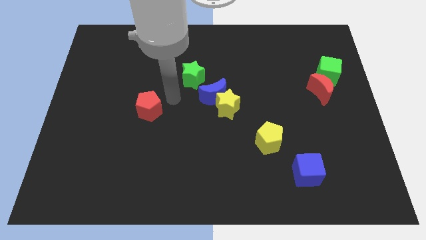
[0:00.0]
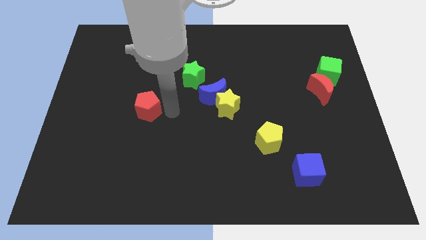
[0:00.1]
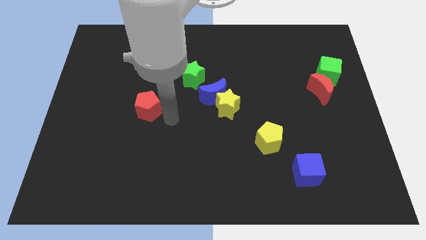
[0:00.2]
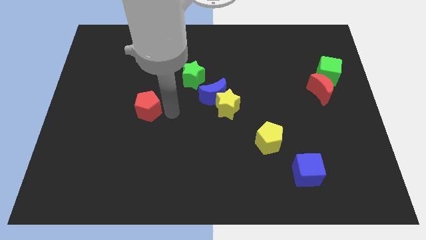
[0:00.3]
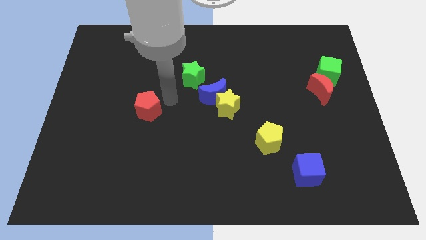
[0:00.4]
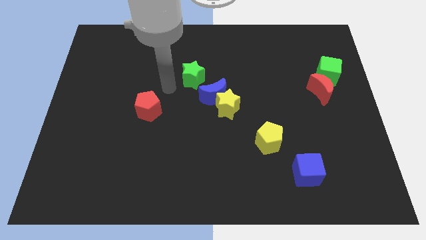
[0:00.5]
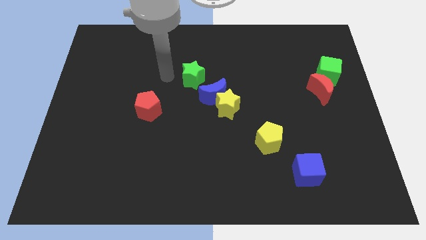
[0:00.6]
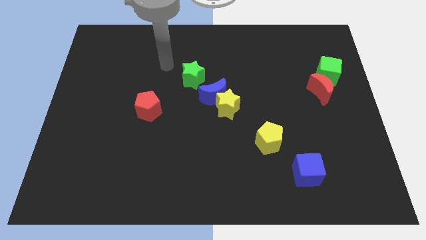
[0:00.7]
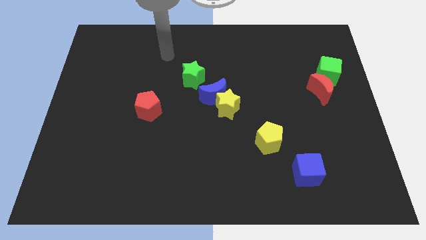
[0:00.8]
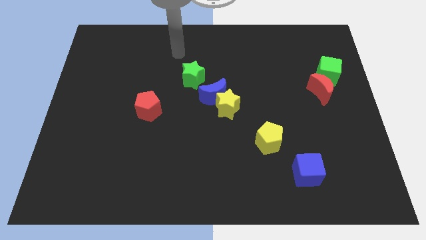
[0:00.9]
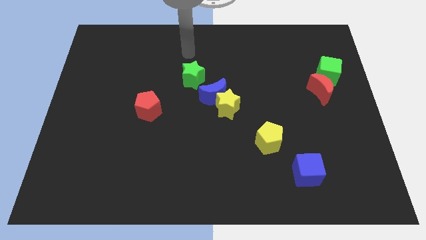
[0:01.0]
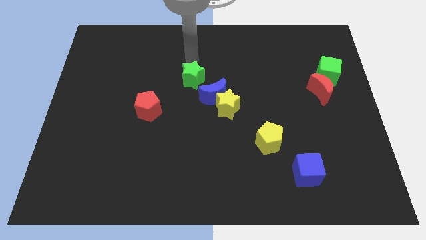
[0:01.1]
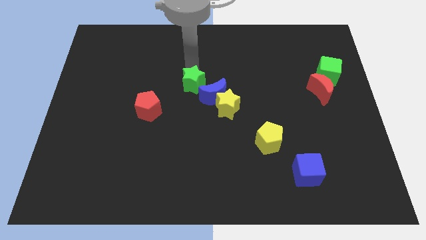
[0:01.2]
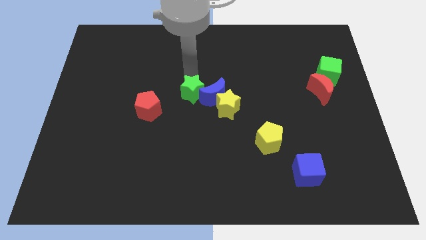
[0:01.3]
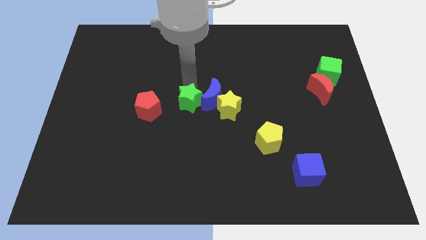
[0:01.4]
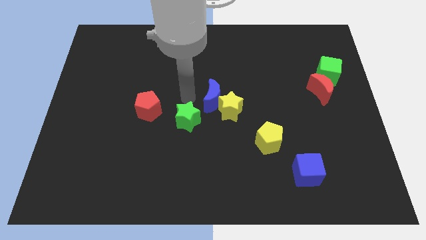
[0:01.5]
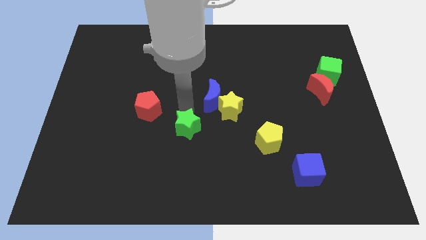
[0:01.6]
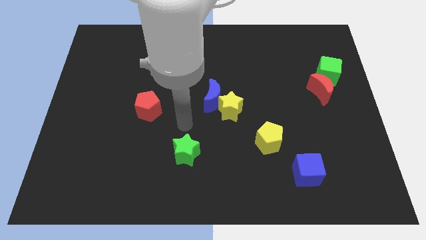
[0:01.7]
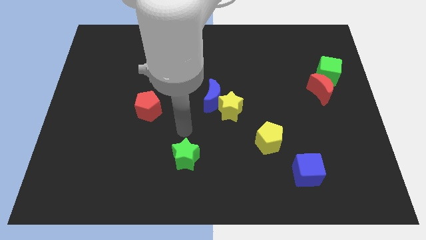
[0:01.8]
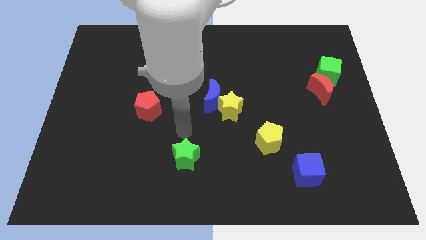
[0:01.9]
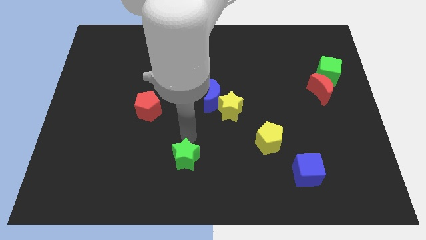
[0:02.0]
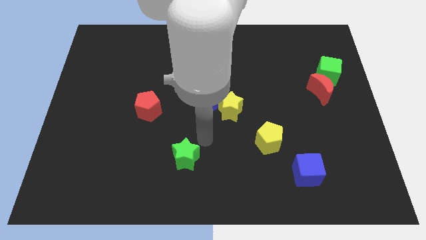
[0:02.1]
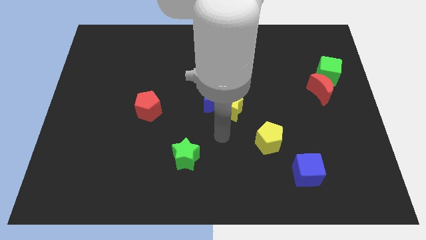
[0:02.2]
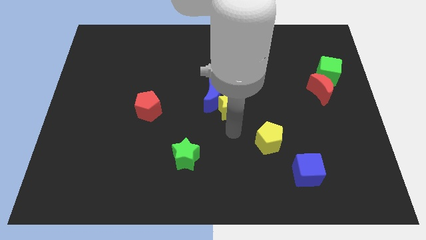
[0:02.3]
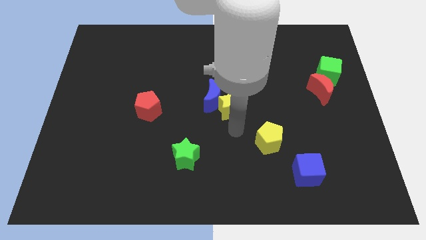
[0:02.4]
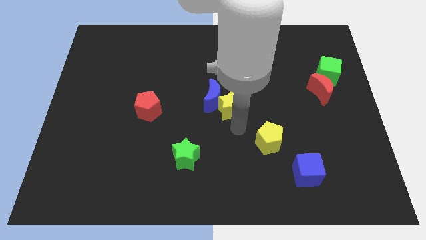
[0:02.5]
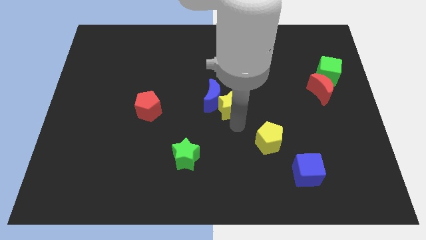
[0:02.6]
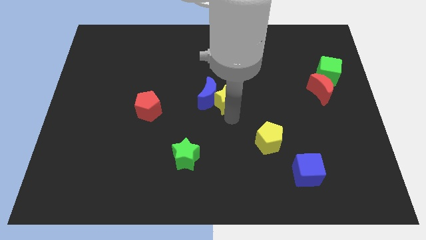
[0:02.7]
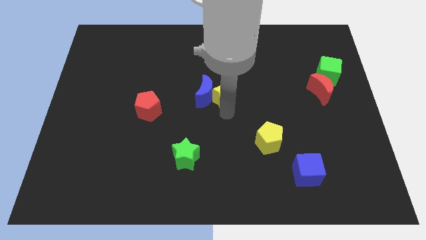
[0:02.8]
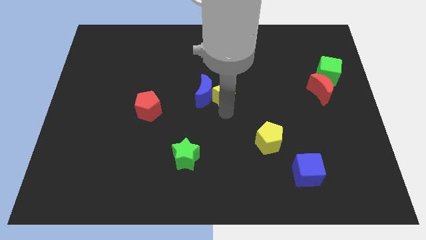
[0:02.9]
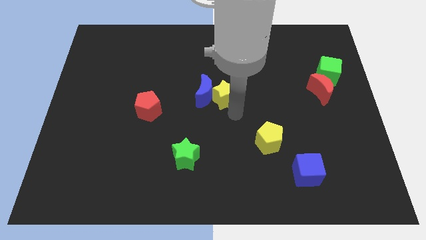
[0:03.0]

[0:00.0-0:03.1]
move the green star towards the bottom left to the yellow pentagon

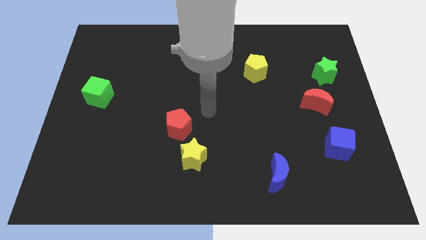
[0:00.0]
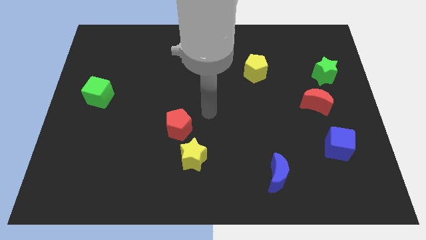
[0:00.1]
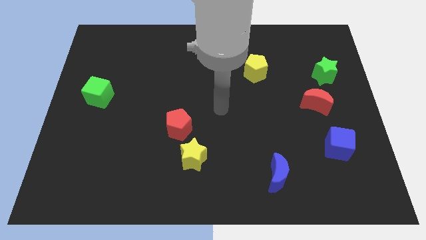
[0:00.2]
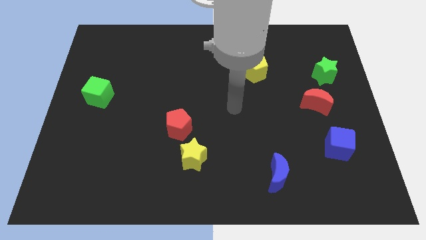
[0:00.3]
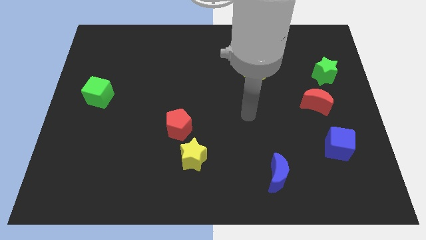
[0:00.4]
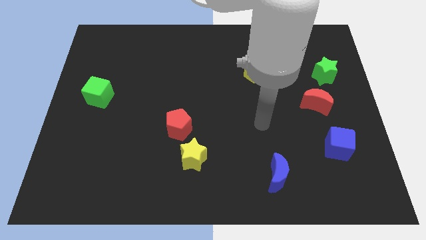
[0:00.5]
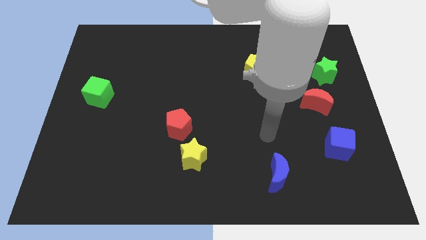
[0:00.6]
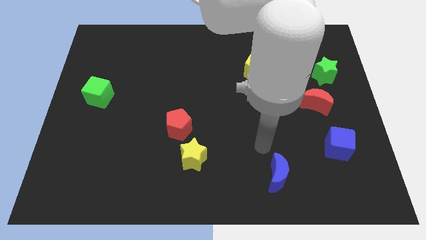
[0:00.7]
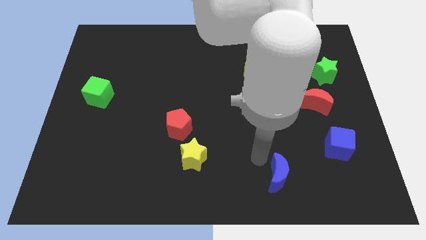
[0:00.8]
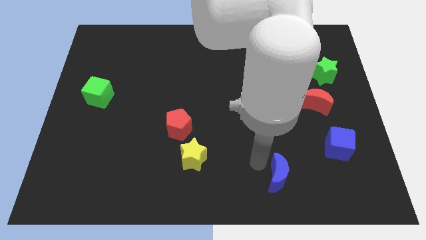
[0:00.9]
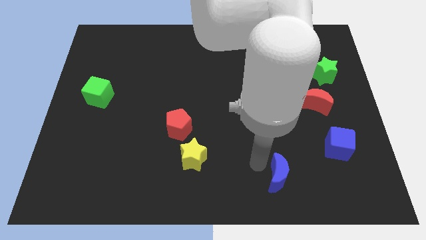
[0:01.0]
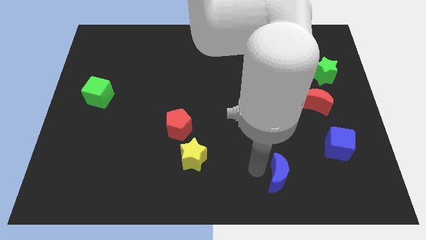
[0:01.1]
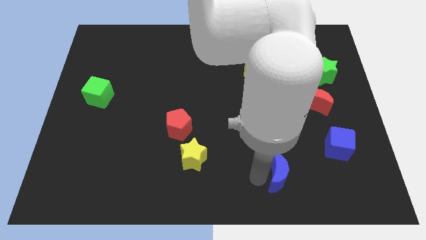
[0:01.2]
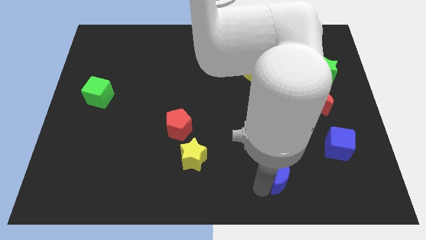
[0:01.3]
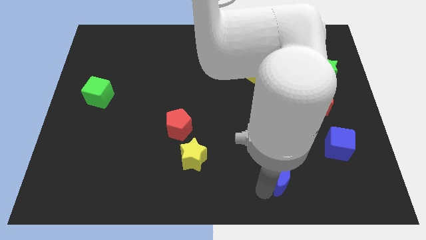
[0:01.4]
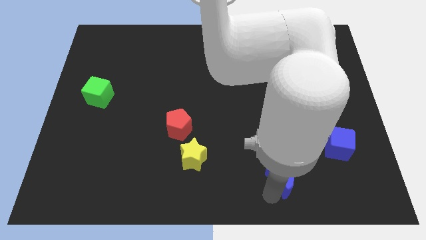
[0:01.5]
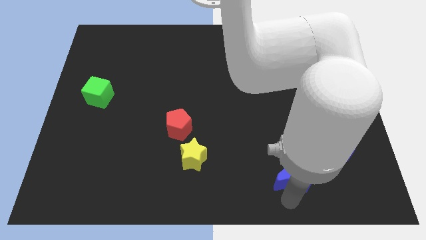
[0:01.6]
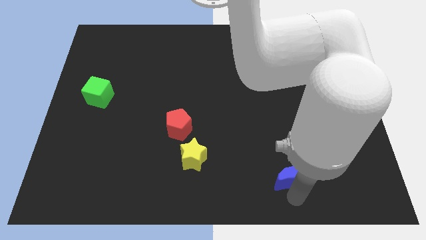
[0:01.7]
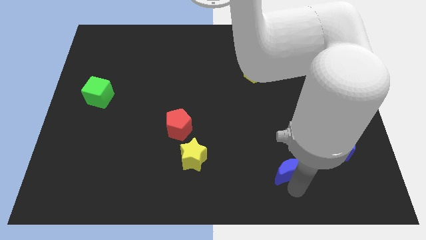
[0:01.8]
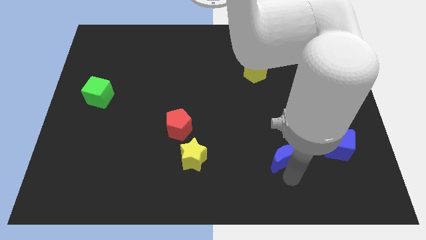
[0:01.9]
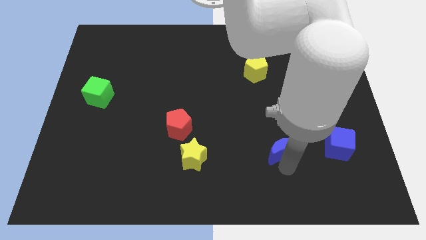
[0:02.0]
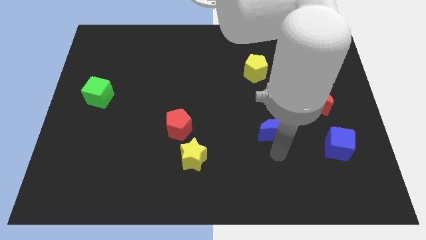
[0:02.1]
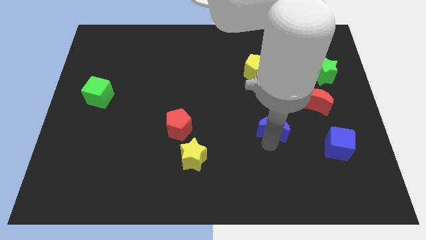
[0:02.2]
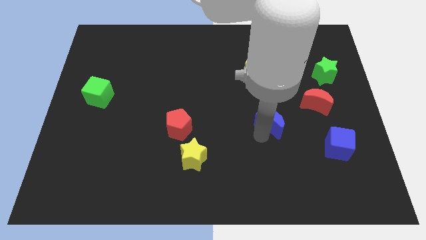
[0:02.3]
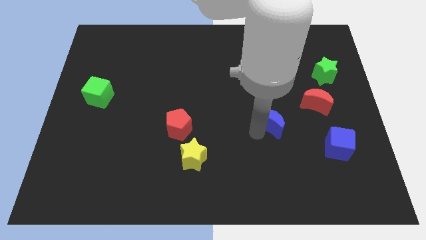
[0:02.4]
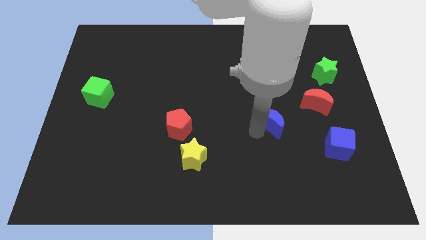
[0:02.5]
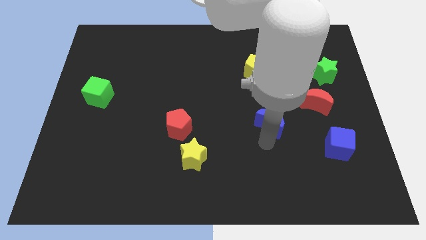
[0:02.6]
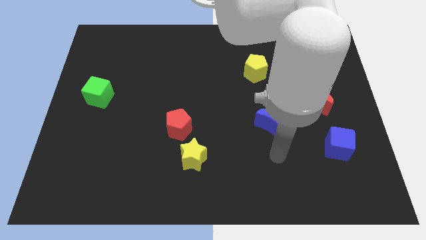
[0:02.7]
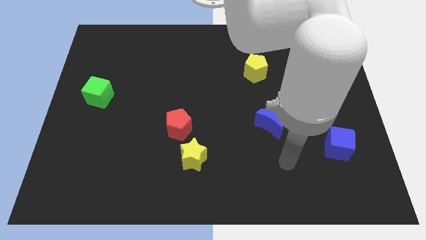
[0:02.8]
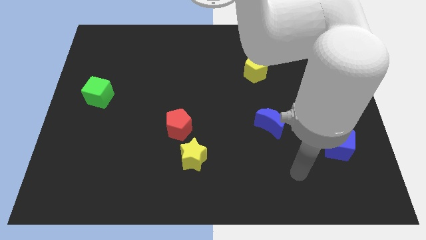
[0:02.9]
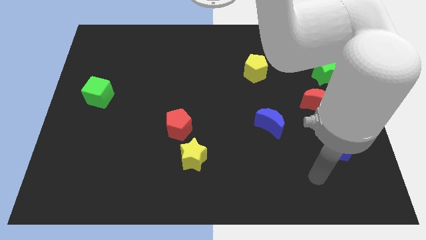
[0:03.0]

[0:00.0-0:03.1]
push the blue moon to the horizontal right of the red pentagon

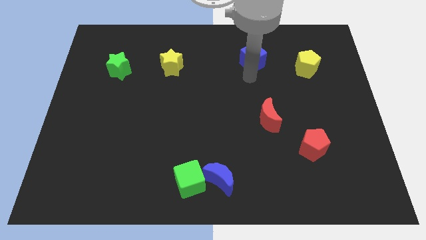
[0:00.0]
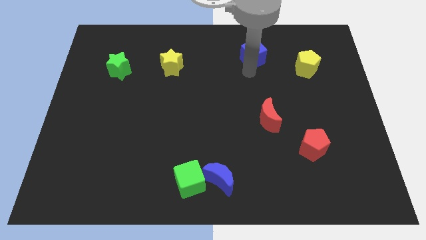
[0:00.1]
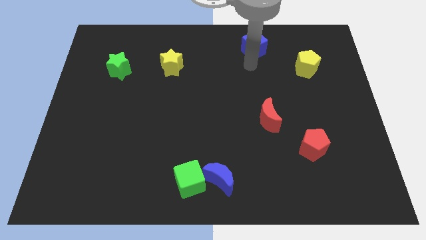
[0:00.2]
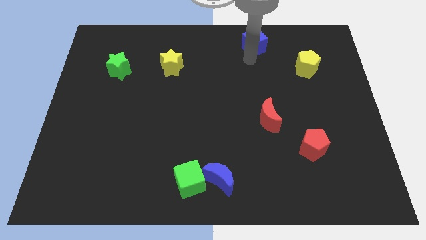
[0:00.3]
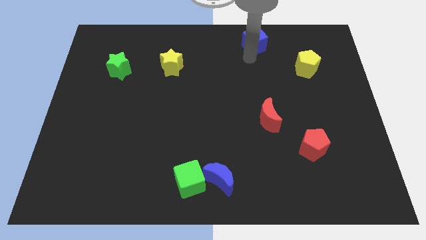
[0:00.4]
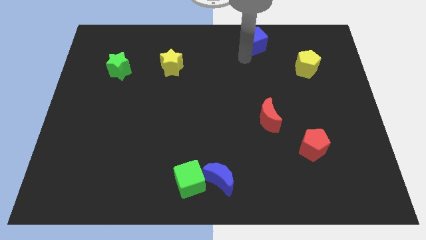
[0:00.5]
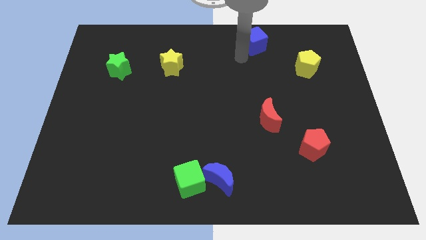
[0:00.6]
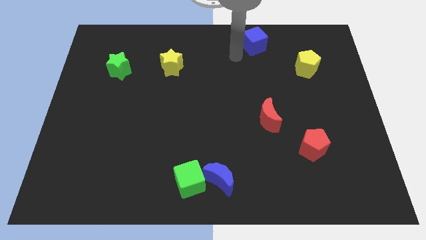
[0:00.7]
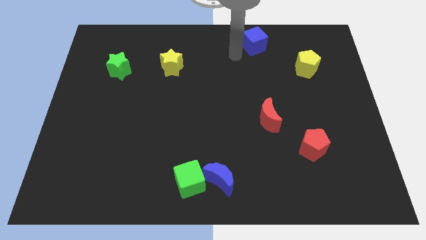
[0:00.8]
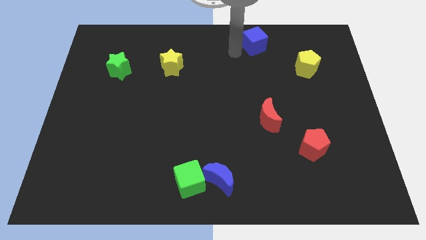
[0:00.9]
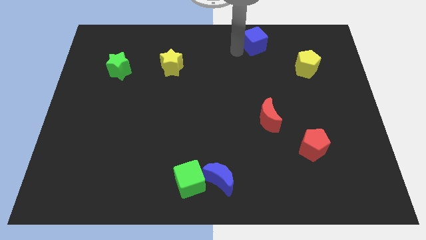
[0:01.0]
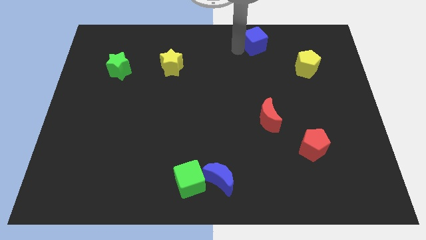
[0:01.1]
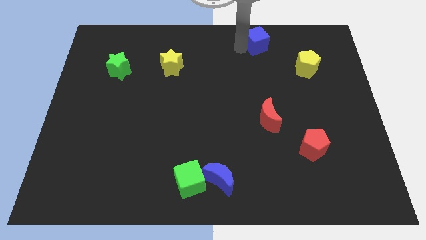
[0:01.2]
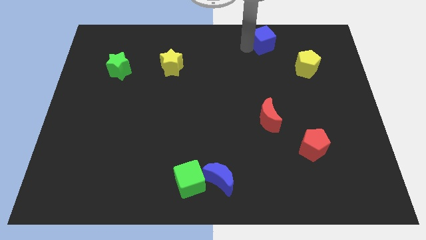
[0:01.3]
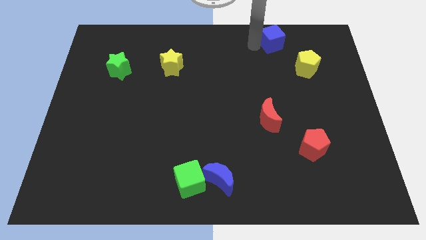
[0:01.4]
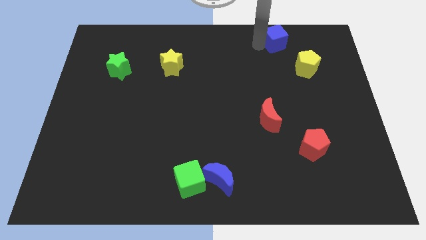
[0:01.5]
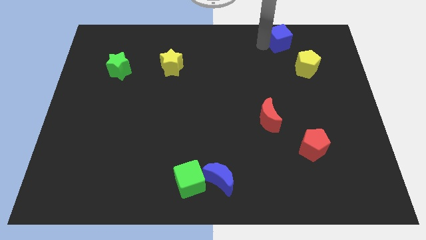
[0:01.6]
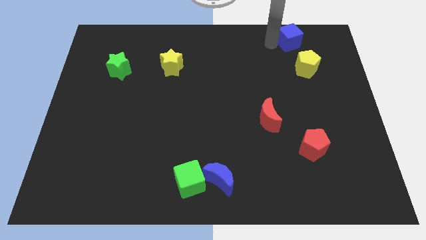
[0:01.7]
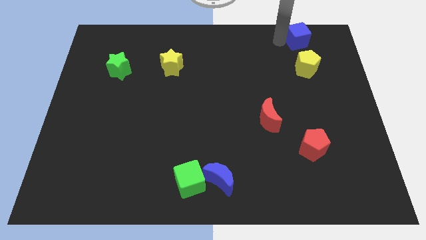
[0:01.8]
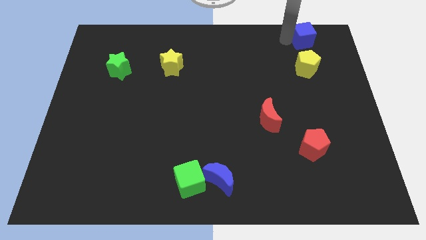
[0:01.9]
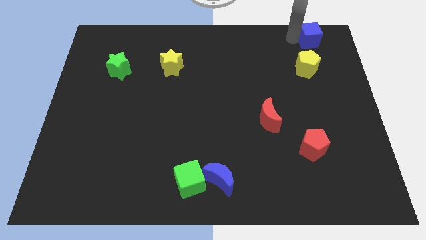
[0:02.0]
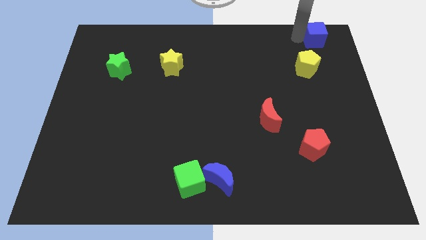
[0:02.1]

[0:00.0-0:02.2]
put the blue cube above the yellow pentagon

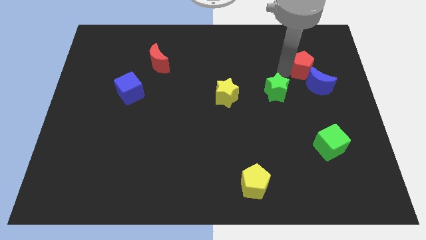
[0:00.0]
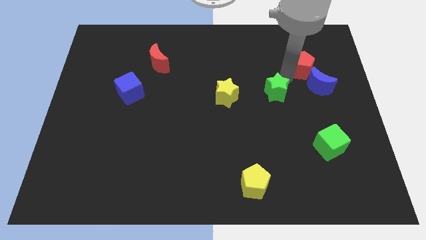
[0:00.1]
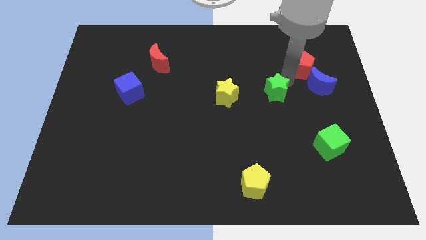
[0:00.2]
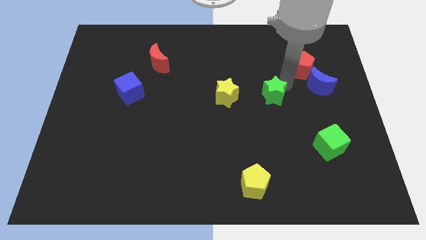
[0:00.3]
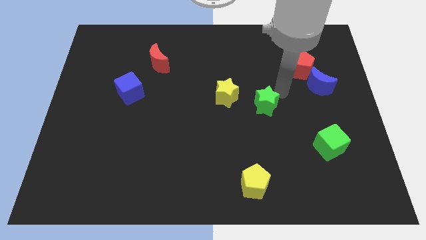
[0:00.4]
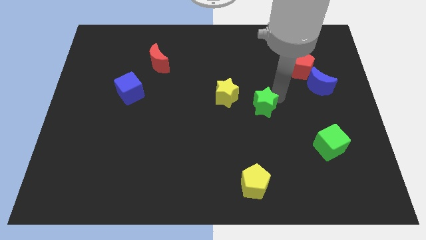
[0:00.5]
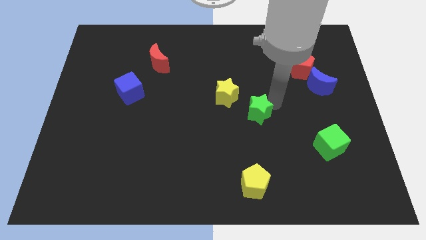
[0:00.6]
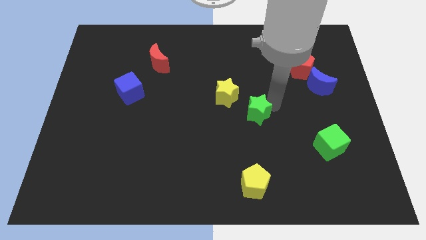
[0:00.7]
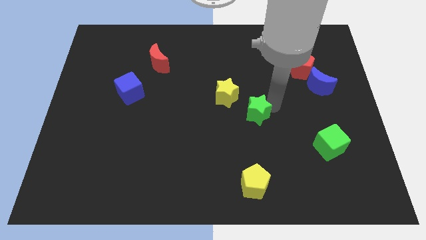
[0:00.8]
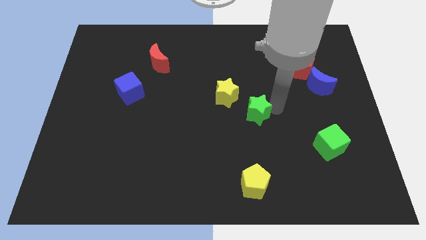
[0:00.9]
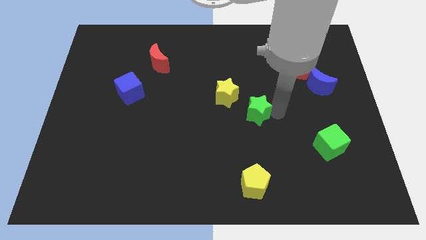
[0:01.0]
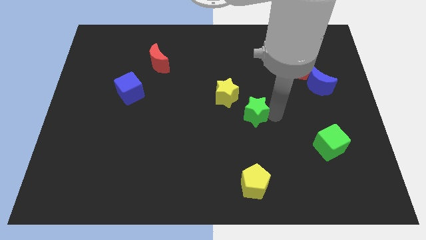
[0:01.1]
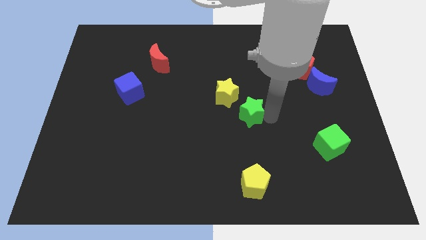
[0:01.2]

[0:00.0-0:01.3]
place the green star vertically above the yellow pentagon
